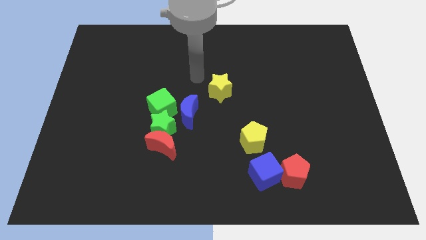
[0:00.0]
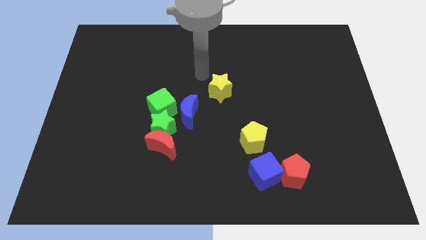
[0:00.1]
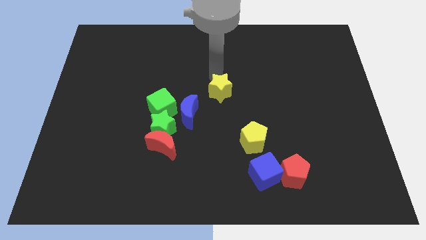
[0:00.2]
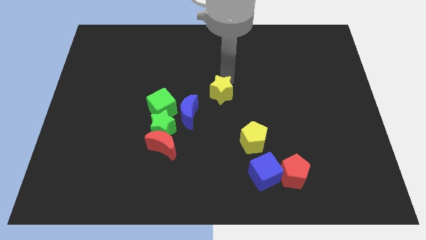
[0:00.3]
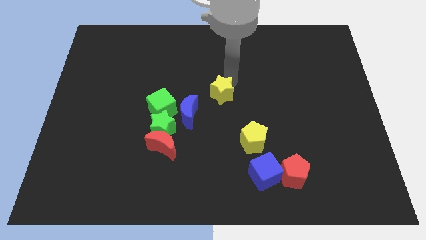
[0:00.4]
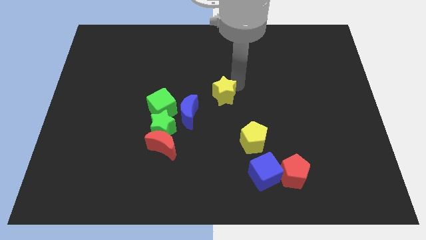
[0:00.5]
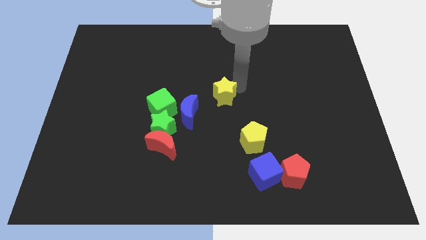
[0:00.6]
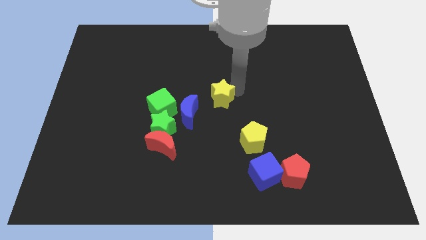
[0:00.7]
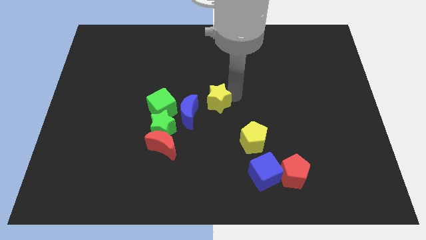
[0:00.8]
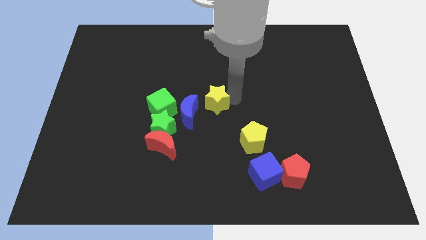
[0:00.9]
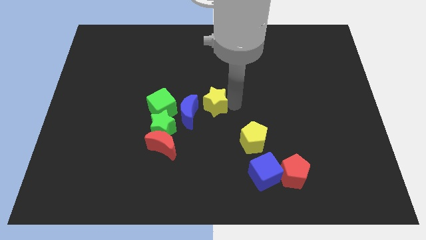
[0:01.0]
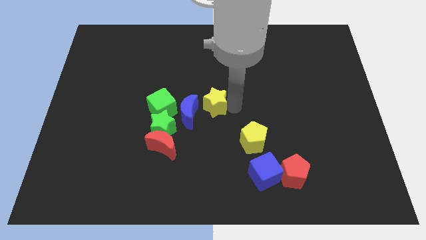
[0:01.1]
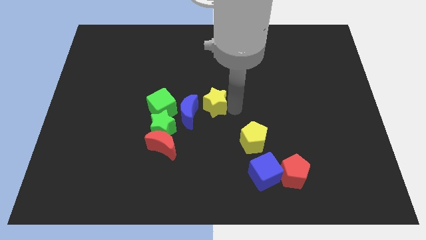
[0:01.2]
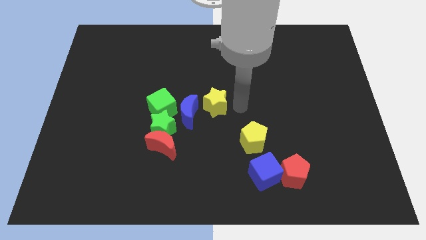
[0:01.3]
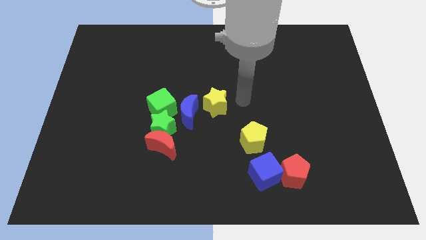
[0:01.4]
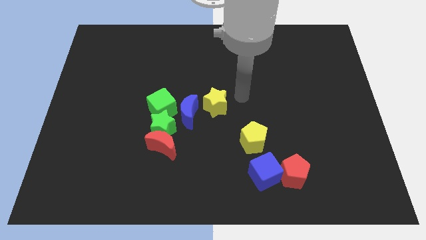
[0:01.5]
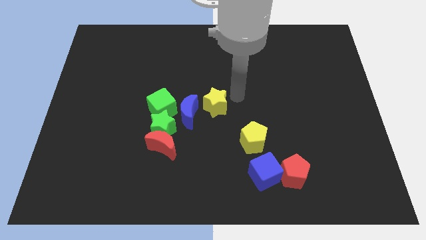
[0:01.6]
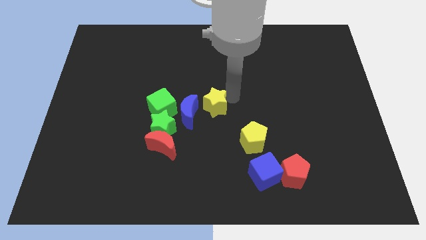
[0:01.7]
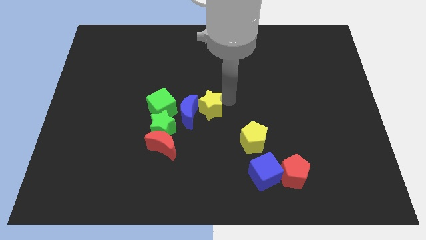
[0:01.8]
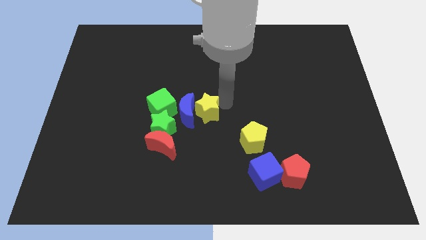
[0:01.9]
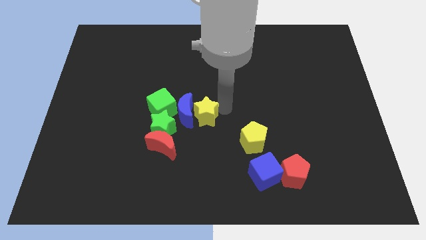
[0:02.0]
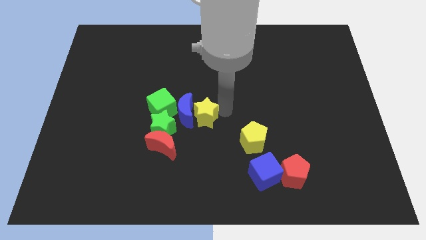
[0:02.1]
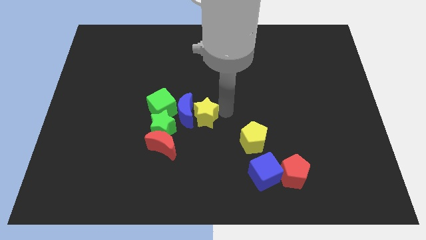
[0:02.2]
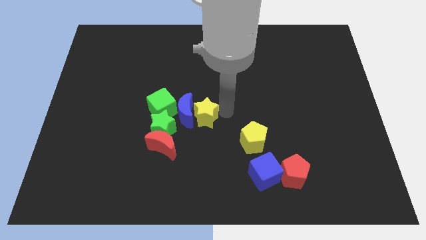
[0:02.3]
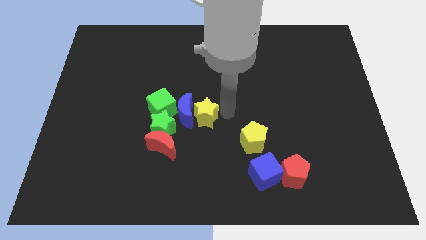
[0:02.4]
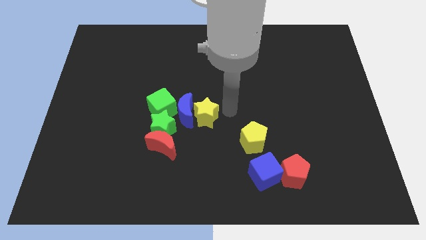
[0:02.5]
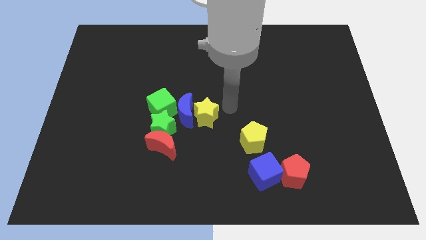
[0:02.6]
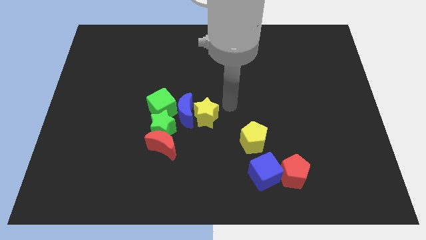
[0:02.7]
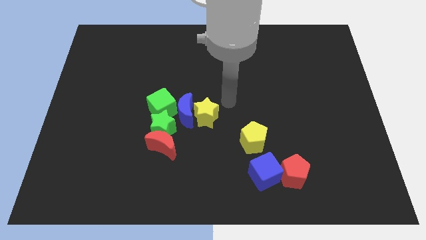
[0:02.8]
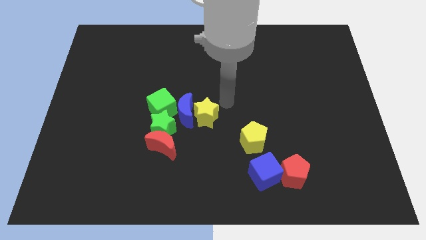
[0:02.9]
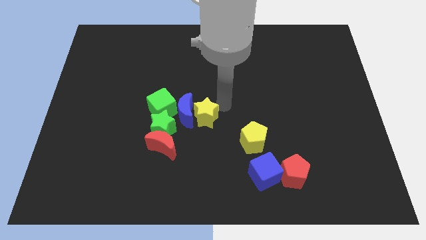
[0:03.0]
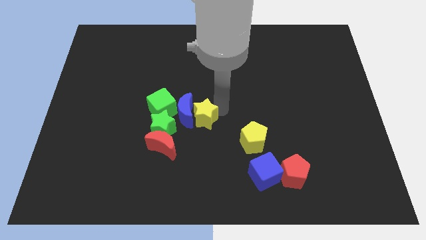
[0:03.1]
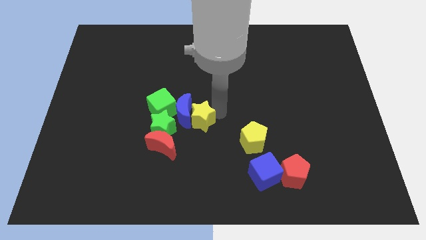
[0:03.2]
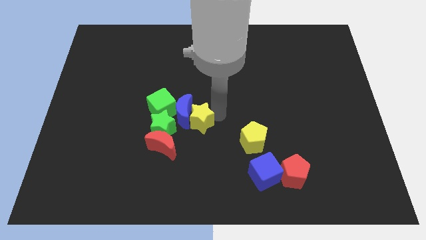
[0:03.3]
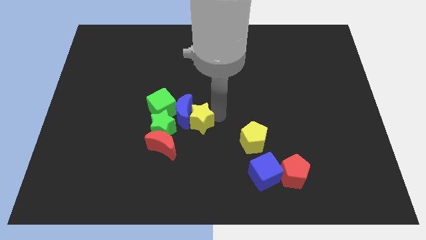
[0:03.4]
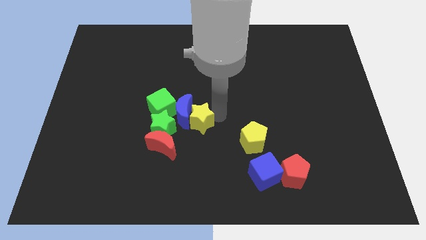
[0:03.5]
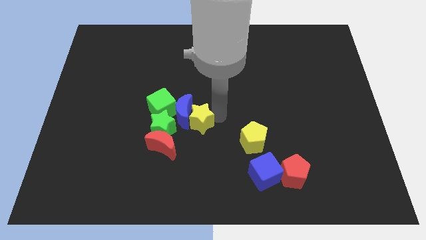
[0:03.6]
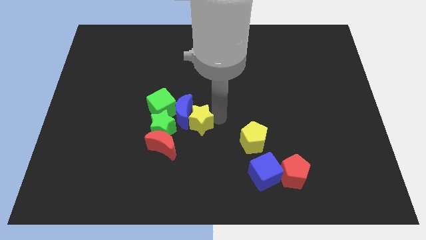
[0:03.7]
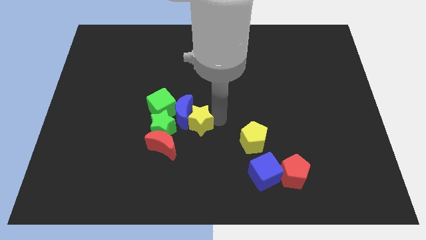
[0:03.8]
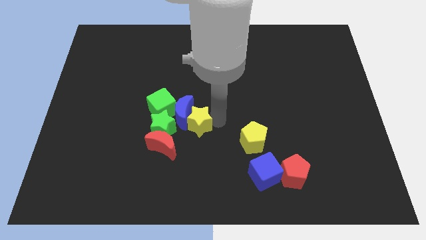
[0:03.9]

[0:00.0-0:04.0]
push the yellow star into the blue crescent

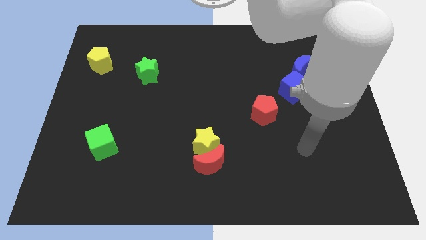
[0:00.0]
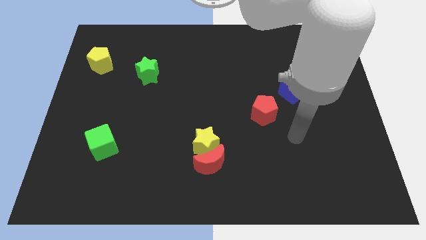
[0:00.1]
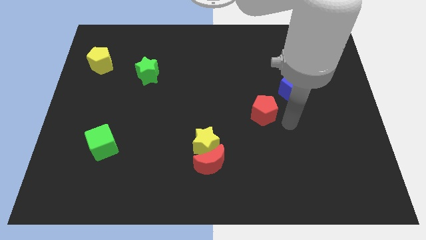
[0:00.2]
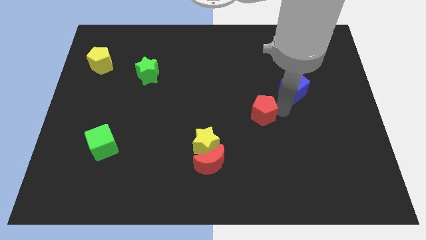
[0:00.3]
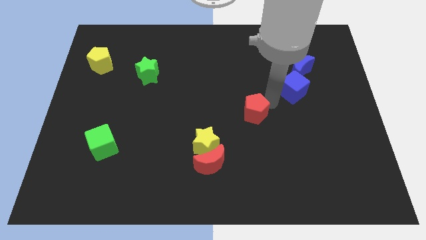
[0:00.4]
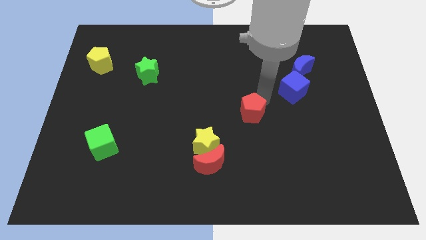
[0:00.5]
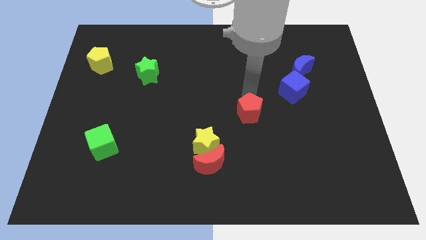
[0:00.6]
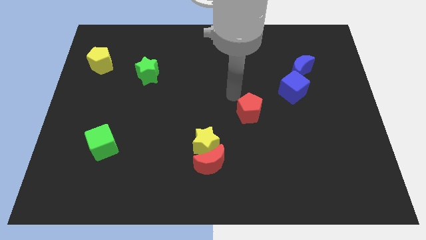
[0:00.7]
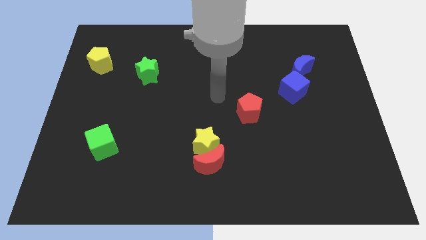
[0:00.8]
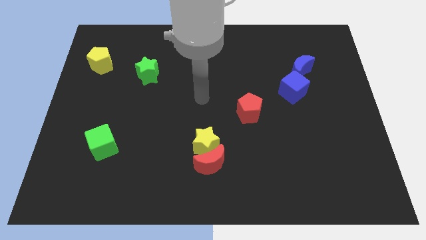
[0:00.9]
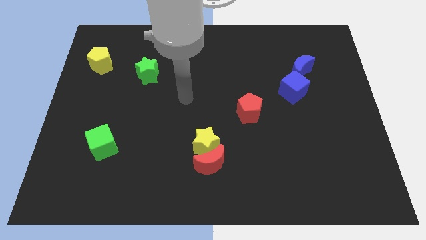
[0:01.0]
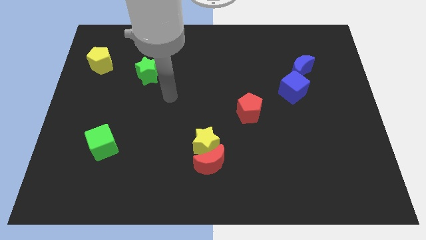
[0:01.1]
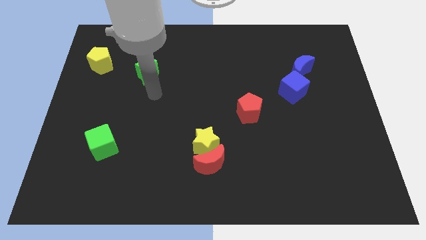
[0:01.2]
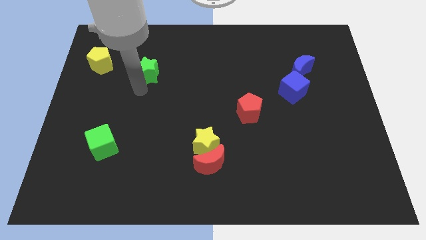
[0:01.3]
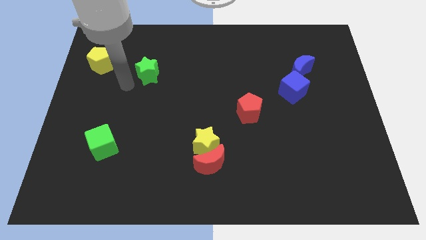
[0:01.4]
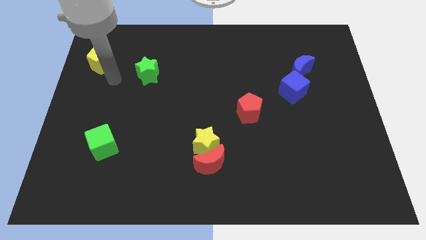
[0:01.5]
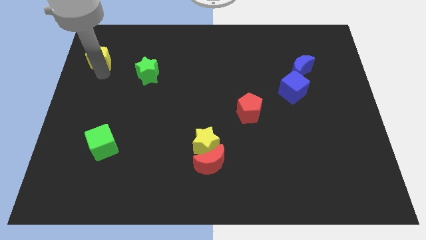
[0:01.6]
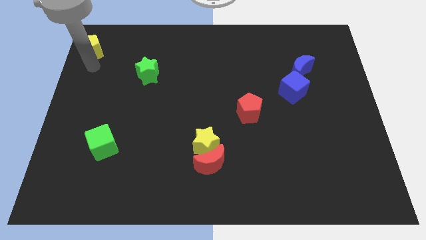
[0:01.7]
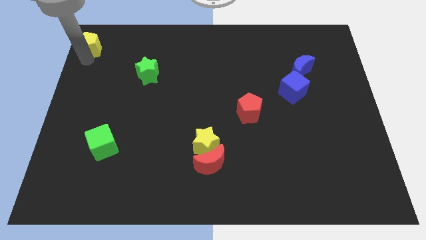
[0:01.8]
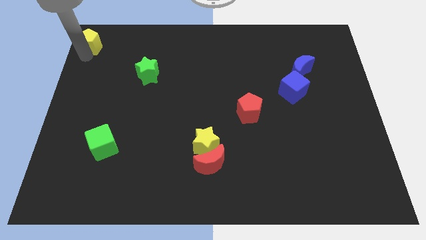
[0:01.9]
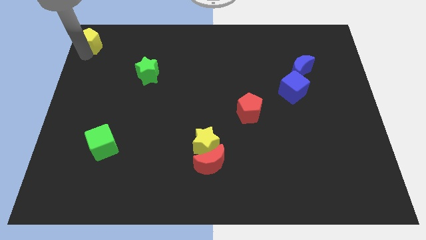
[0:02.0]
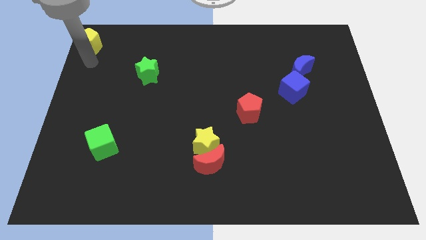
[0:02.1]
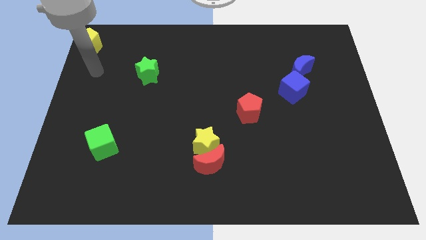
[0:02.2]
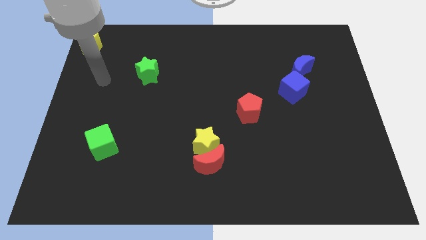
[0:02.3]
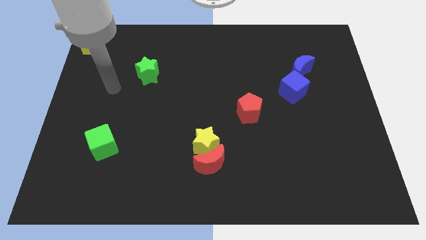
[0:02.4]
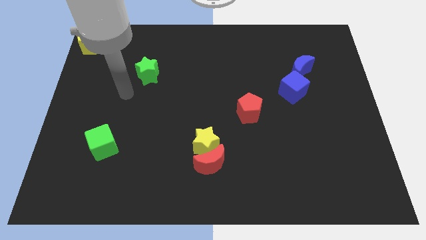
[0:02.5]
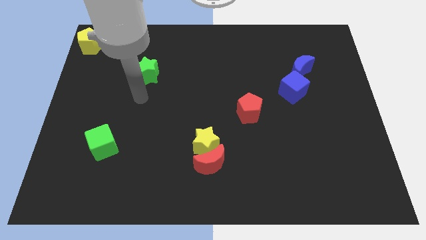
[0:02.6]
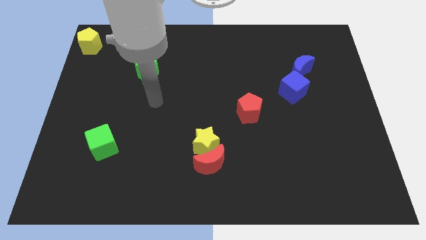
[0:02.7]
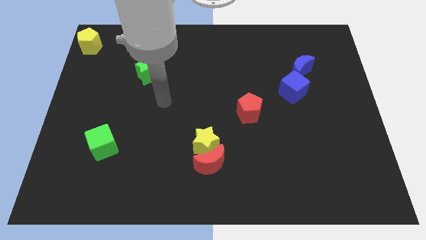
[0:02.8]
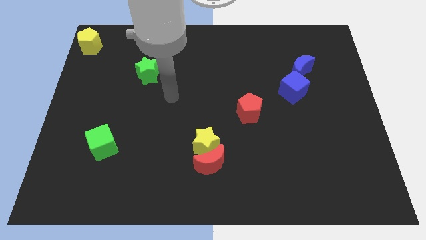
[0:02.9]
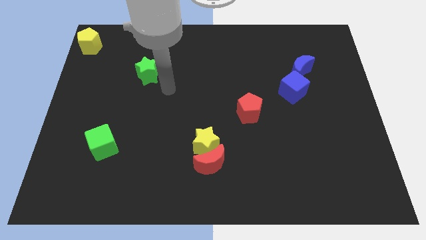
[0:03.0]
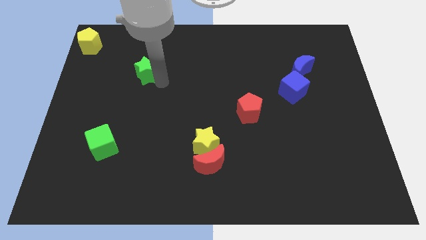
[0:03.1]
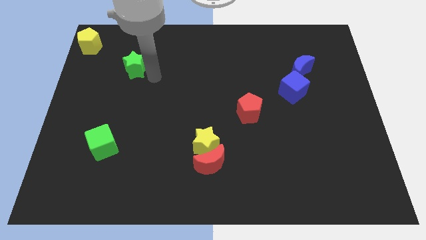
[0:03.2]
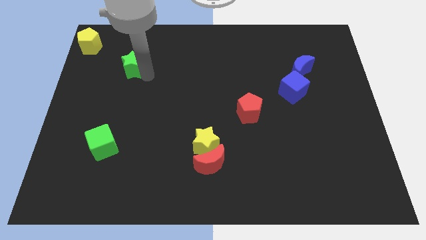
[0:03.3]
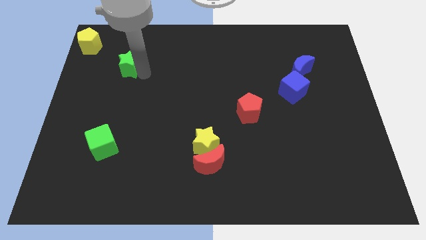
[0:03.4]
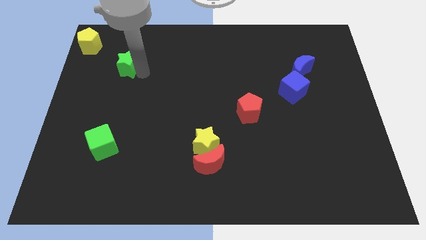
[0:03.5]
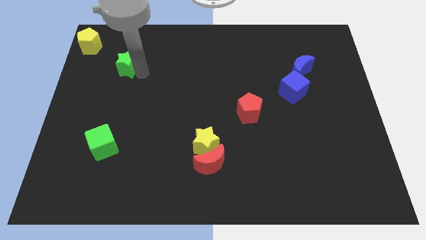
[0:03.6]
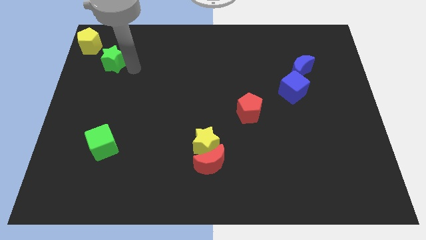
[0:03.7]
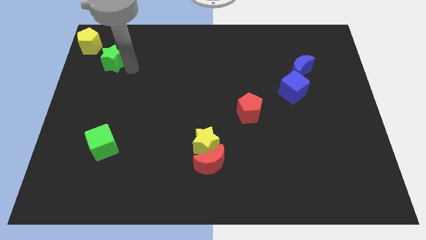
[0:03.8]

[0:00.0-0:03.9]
move the green star above green cube

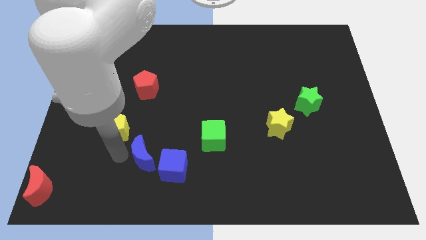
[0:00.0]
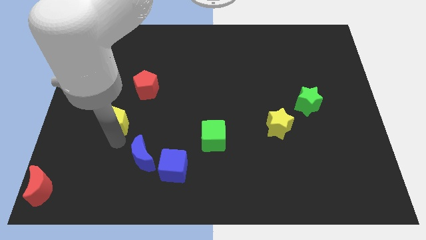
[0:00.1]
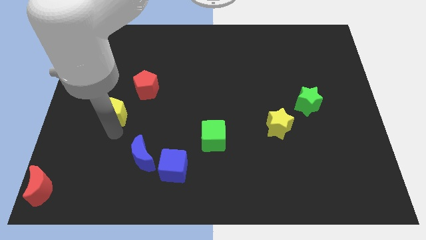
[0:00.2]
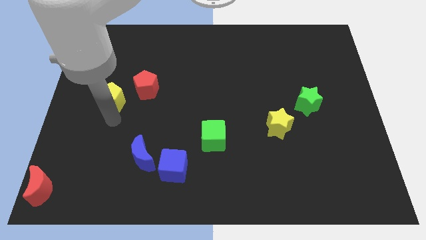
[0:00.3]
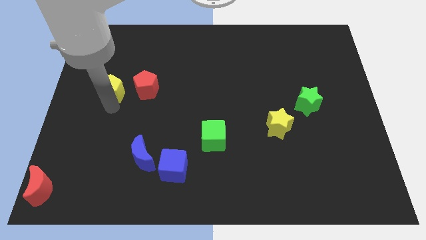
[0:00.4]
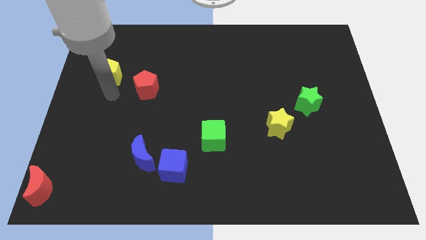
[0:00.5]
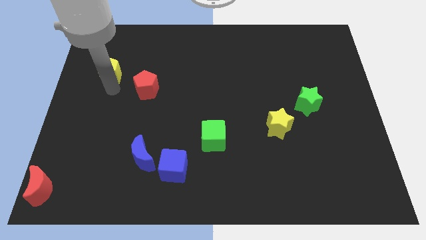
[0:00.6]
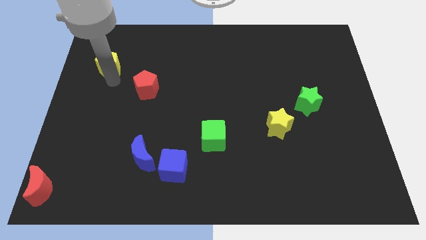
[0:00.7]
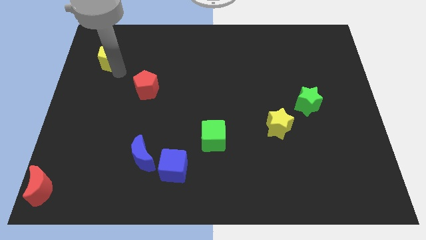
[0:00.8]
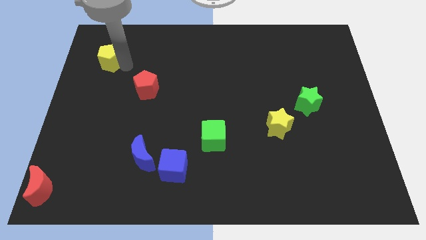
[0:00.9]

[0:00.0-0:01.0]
push the yellow pentagon towards the top

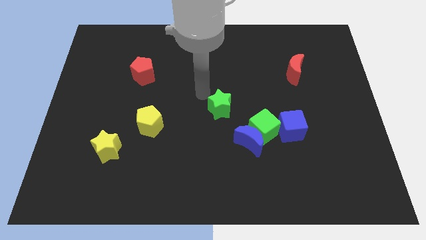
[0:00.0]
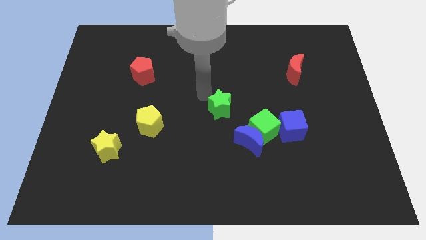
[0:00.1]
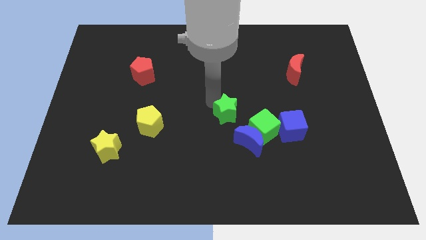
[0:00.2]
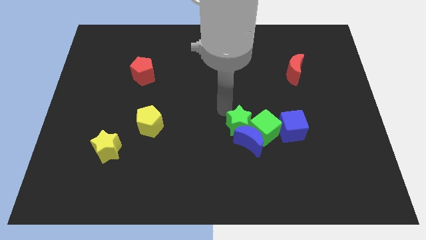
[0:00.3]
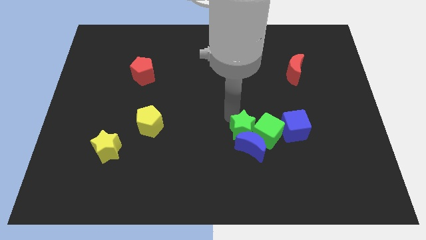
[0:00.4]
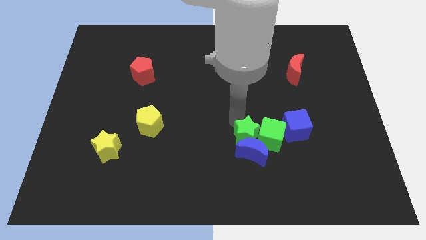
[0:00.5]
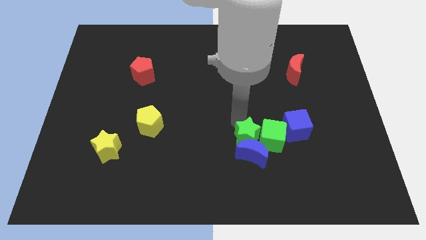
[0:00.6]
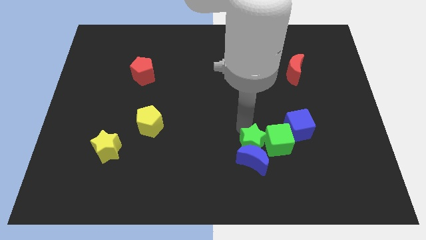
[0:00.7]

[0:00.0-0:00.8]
push the green star into the group of object
